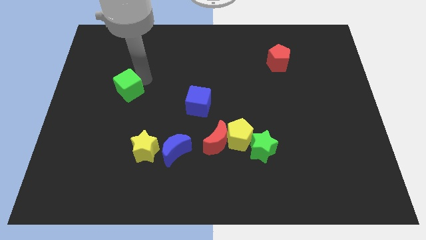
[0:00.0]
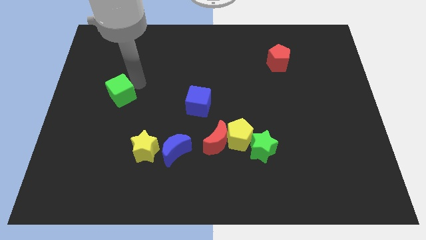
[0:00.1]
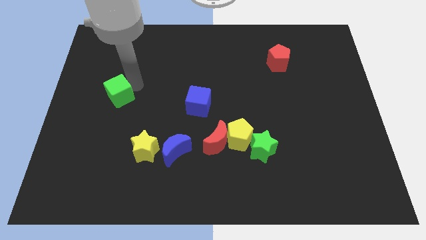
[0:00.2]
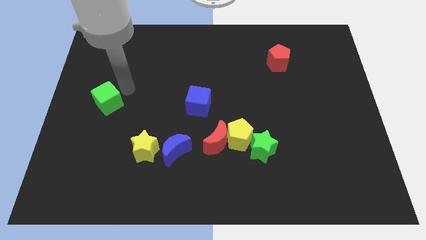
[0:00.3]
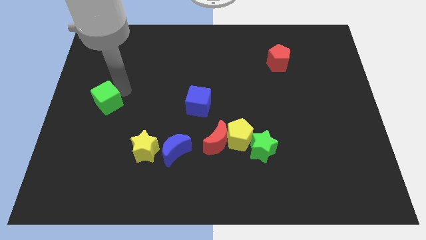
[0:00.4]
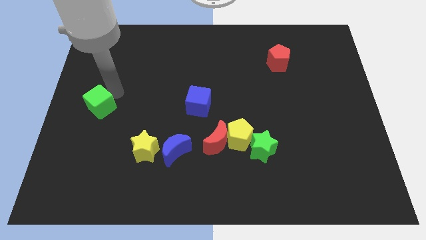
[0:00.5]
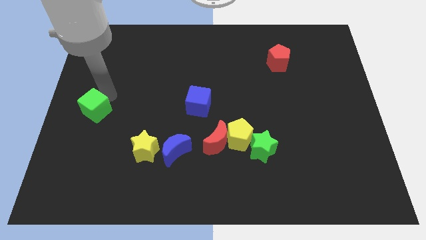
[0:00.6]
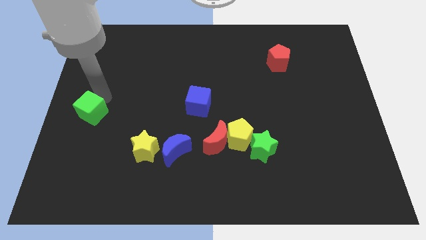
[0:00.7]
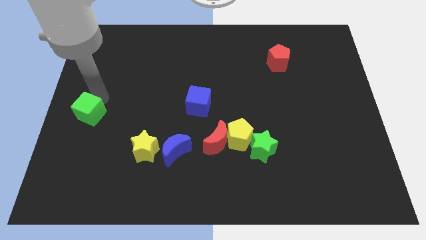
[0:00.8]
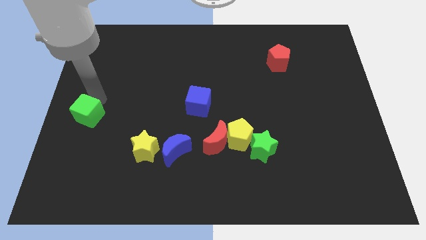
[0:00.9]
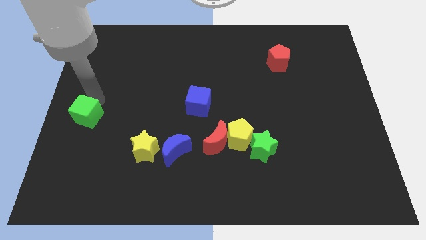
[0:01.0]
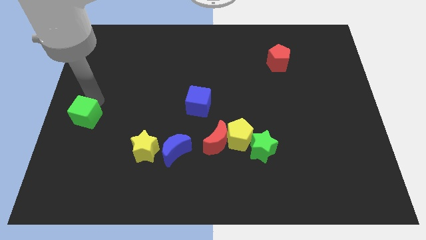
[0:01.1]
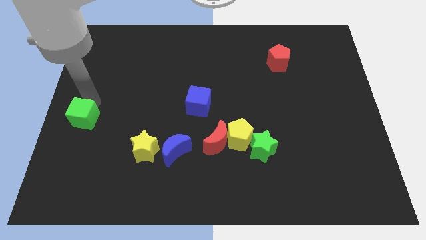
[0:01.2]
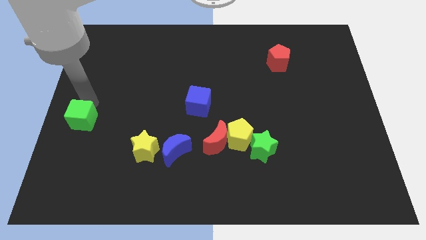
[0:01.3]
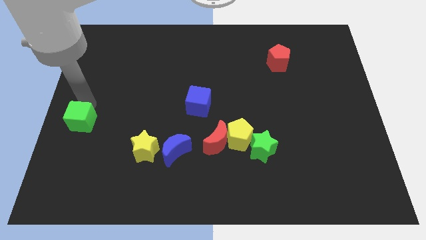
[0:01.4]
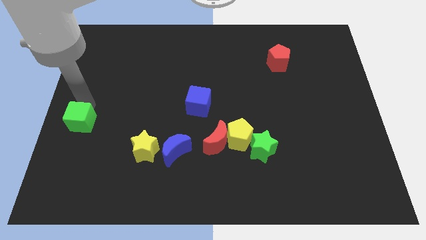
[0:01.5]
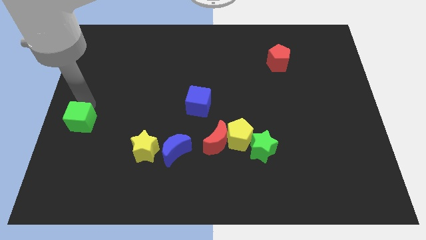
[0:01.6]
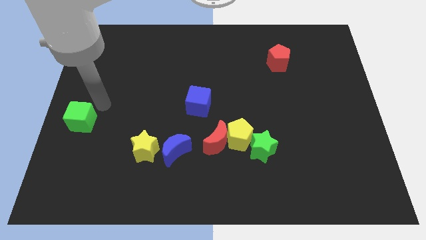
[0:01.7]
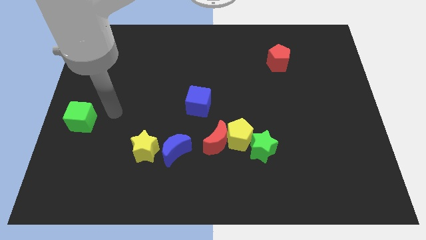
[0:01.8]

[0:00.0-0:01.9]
push green cube slightly towards left bottom

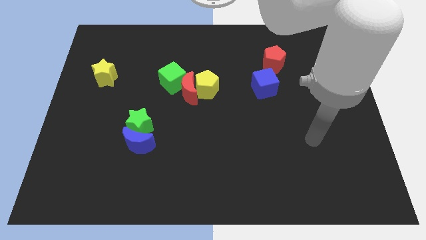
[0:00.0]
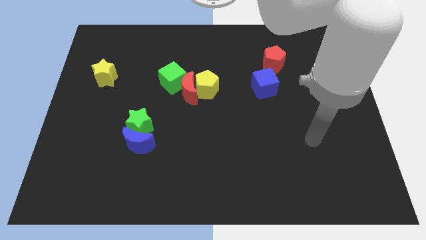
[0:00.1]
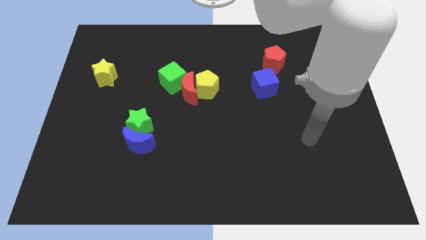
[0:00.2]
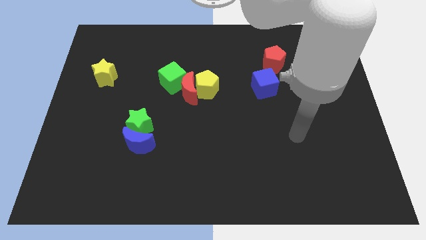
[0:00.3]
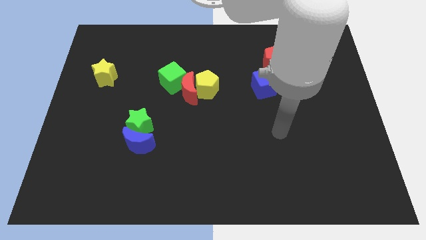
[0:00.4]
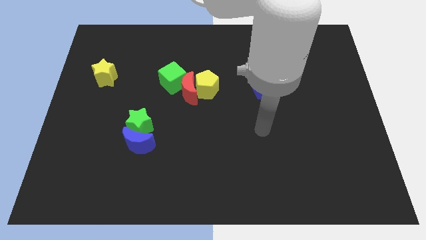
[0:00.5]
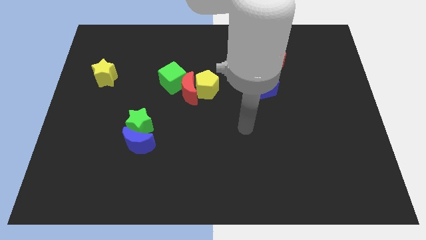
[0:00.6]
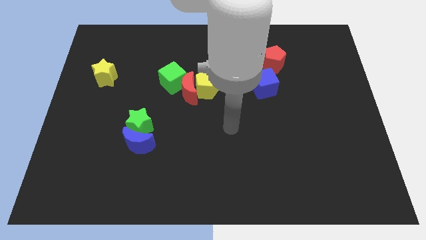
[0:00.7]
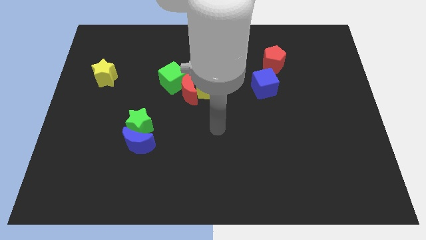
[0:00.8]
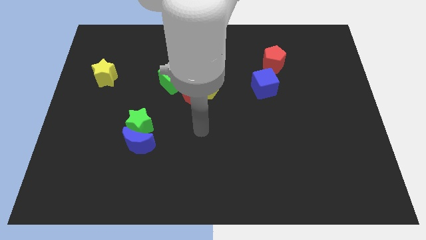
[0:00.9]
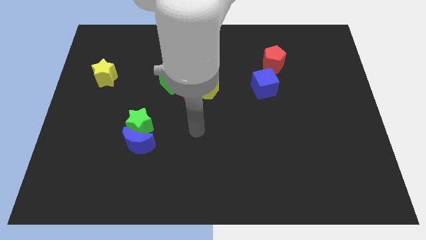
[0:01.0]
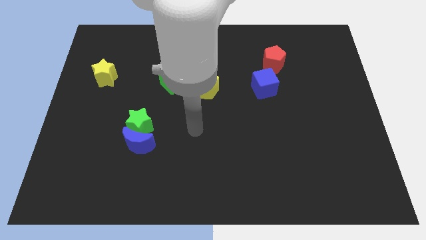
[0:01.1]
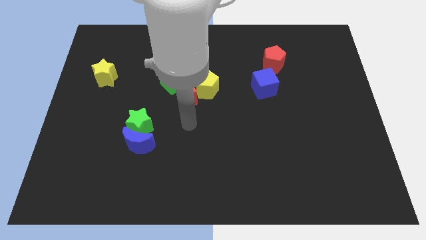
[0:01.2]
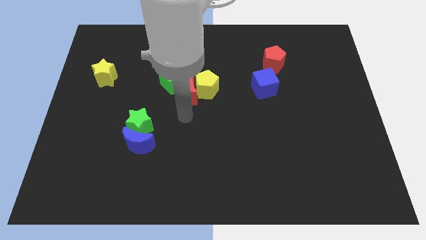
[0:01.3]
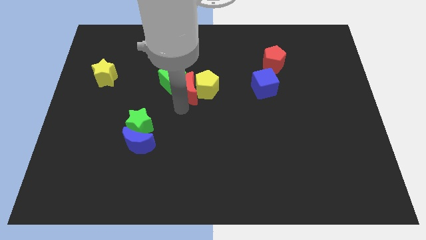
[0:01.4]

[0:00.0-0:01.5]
move your arm below the red crescent

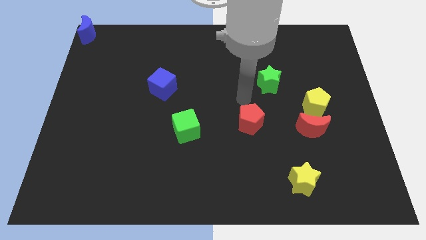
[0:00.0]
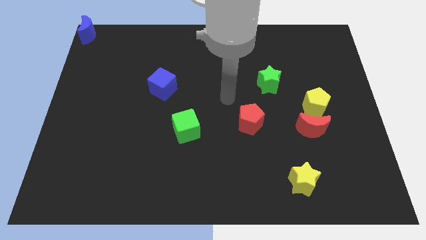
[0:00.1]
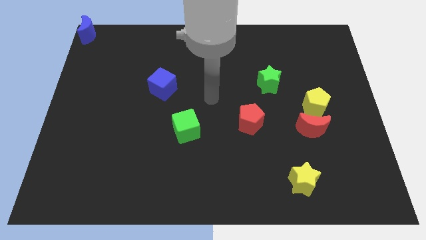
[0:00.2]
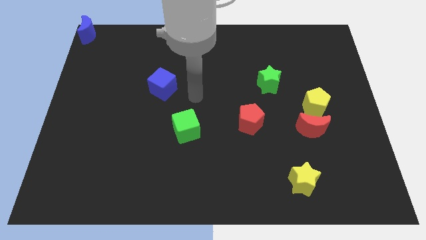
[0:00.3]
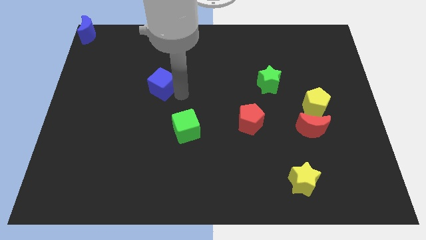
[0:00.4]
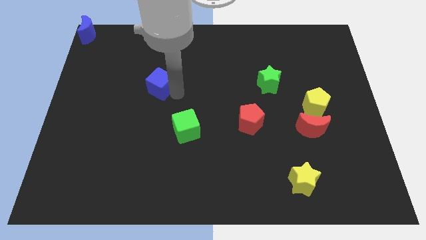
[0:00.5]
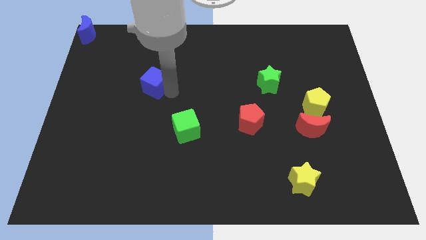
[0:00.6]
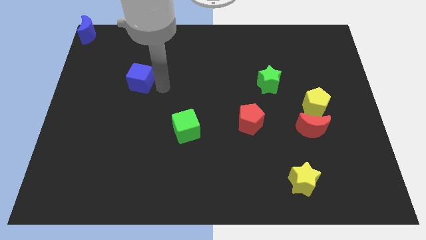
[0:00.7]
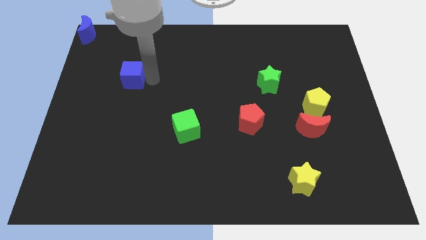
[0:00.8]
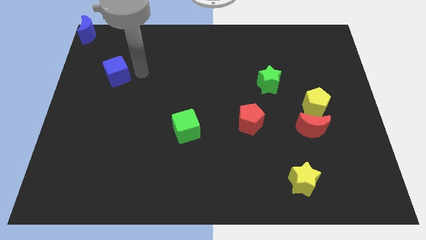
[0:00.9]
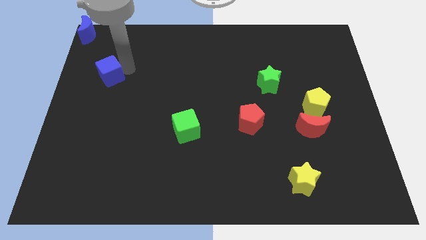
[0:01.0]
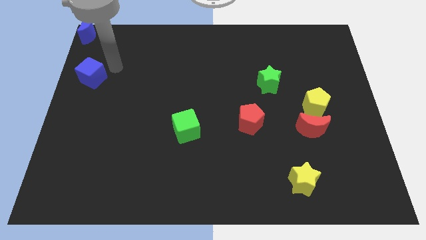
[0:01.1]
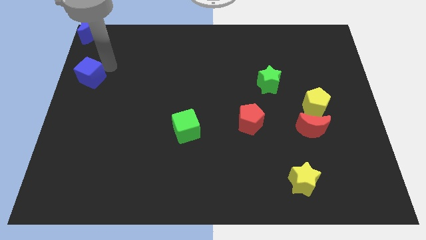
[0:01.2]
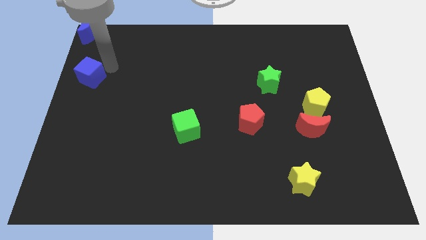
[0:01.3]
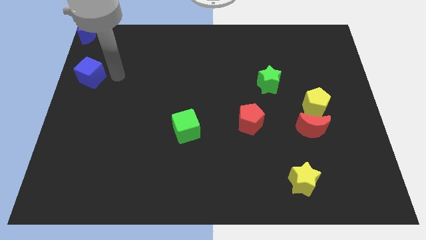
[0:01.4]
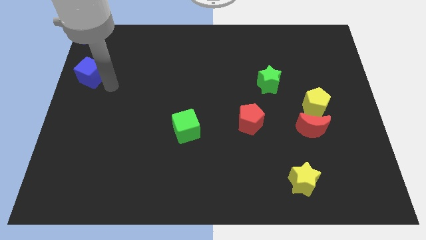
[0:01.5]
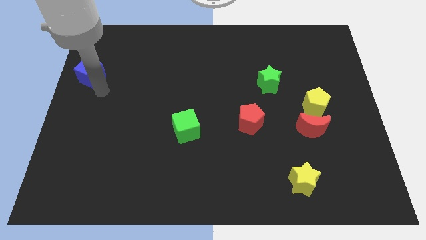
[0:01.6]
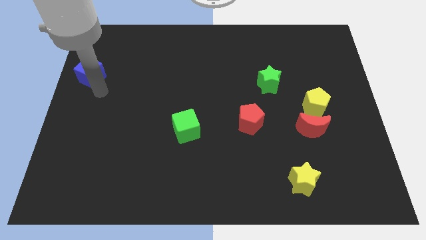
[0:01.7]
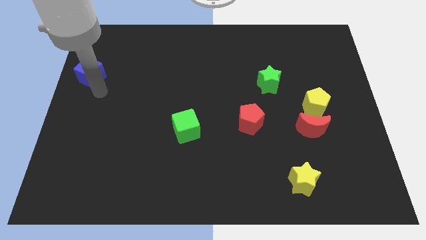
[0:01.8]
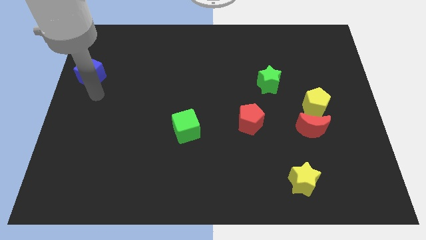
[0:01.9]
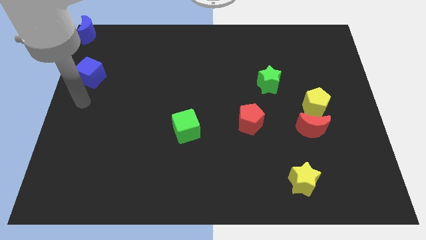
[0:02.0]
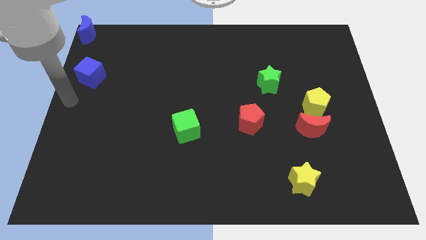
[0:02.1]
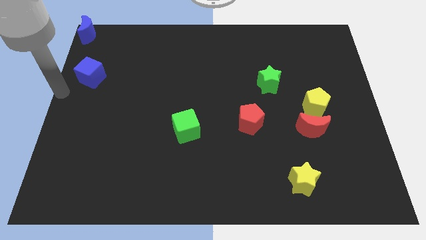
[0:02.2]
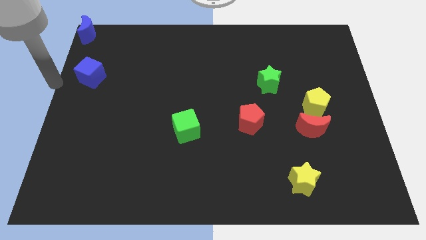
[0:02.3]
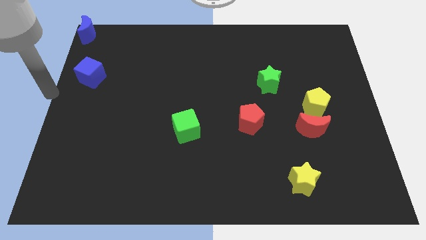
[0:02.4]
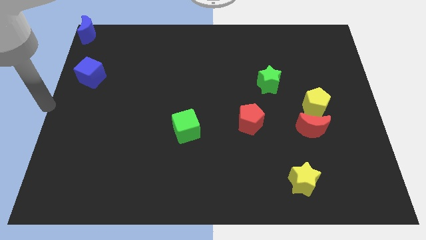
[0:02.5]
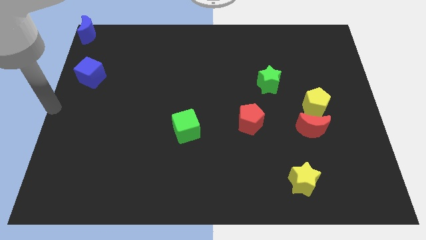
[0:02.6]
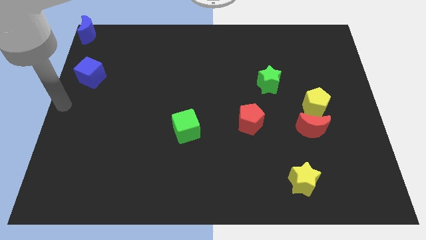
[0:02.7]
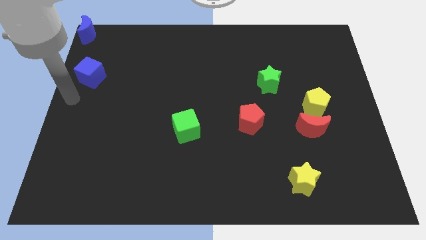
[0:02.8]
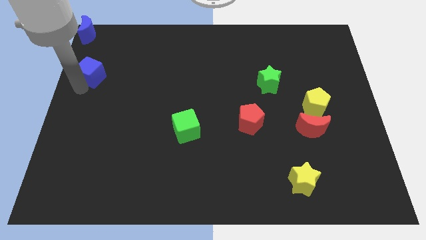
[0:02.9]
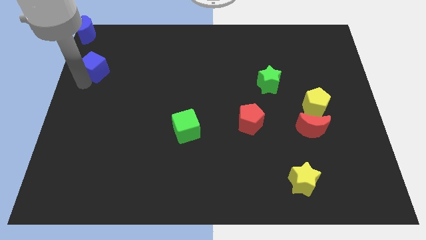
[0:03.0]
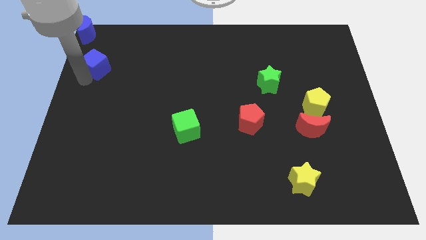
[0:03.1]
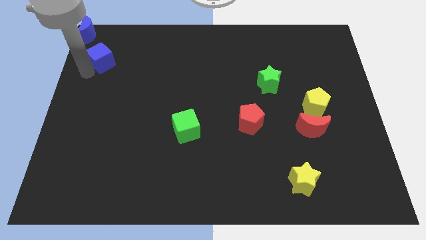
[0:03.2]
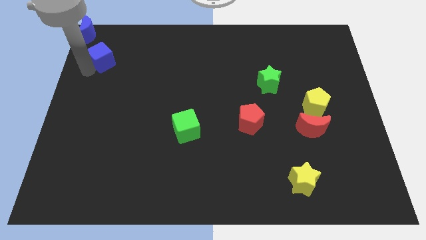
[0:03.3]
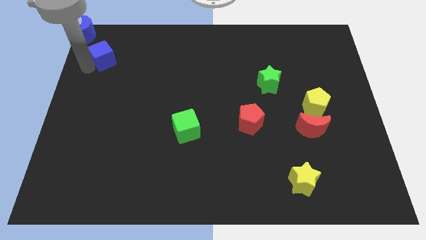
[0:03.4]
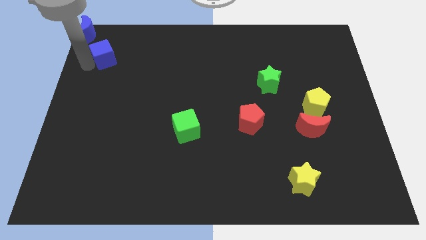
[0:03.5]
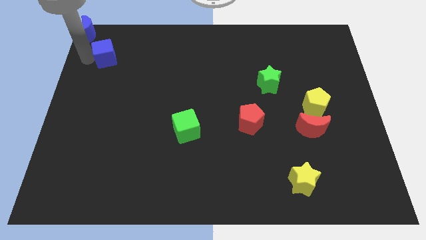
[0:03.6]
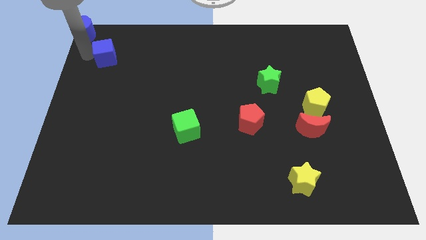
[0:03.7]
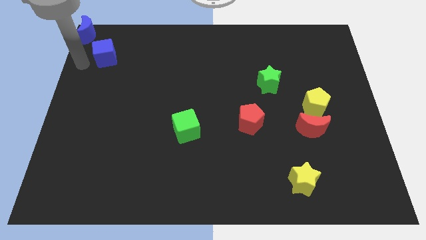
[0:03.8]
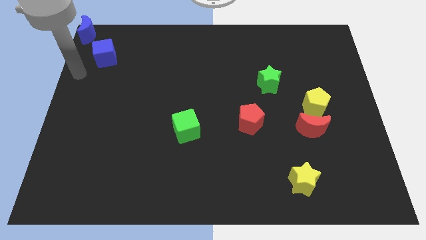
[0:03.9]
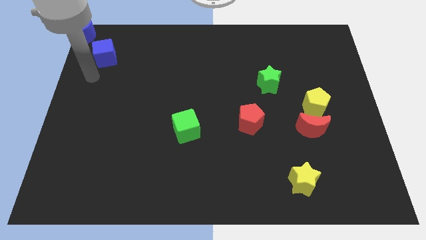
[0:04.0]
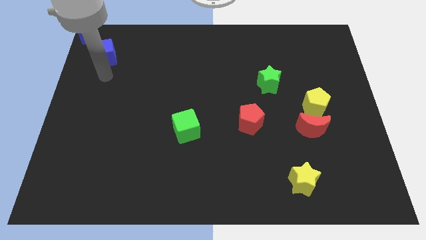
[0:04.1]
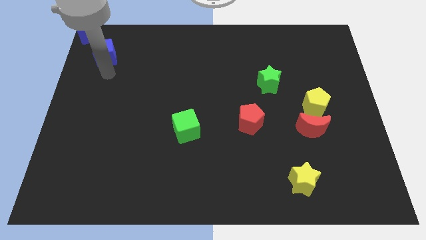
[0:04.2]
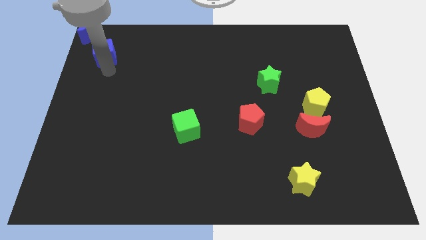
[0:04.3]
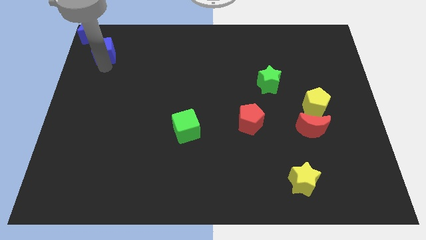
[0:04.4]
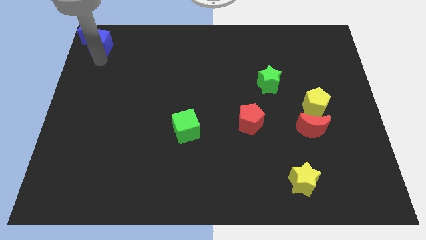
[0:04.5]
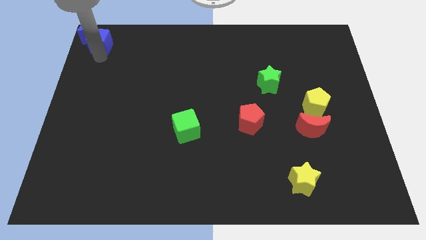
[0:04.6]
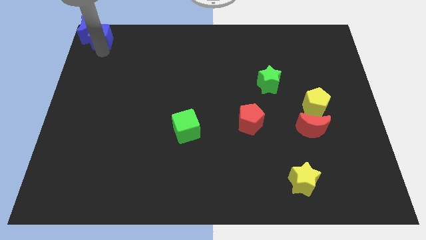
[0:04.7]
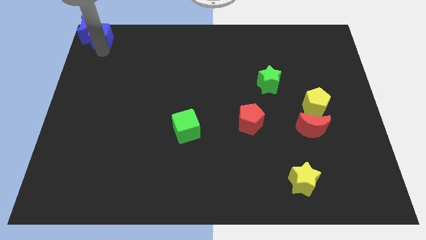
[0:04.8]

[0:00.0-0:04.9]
push blue cube to the top left corner

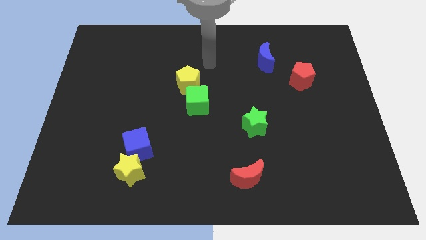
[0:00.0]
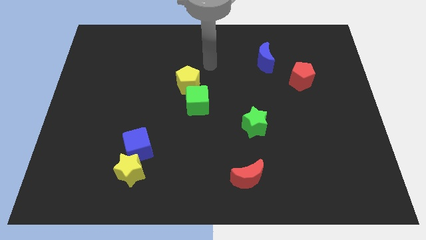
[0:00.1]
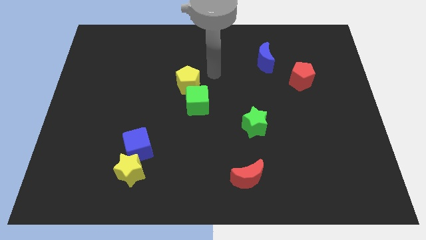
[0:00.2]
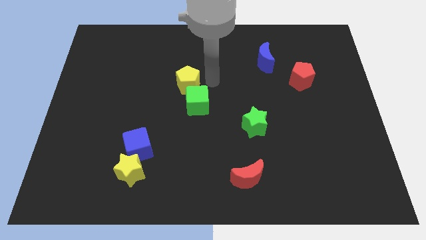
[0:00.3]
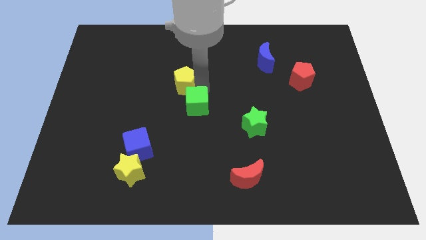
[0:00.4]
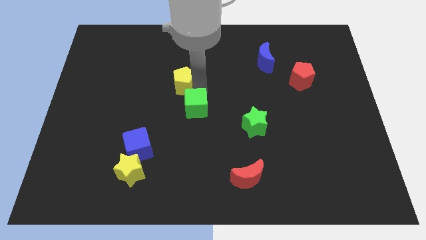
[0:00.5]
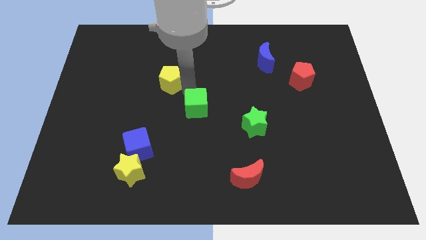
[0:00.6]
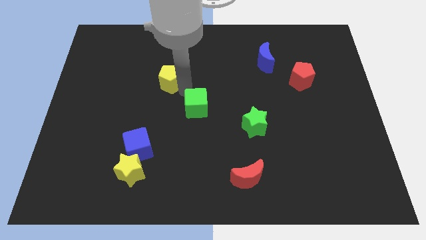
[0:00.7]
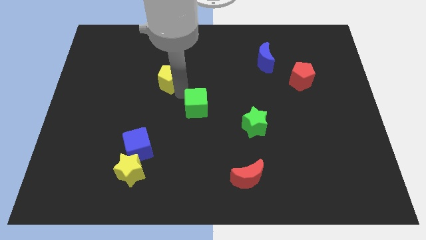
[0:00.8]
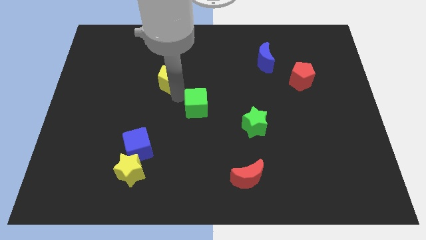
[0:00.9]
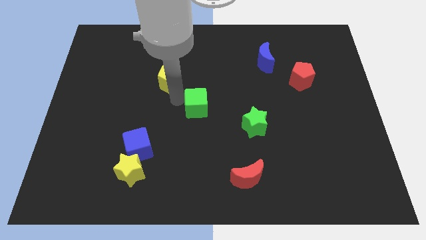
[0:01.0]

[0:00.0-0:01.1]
separate the green cube and the yellow pentagon
